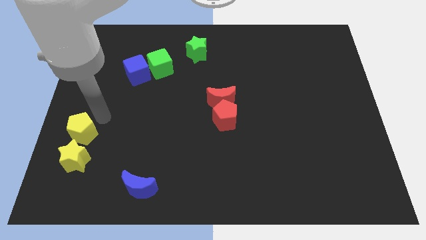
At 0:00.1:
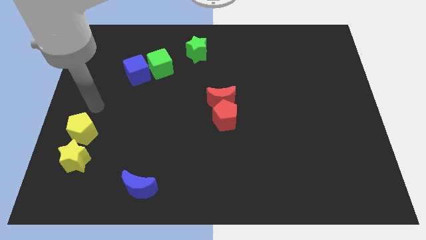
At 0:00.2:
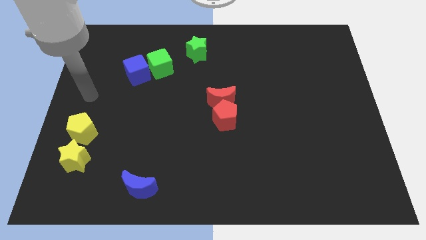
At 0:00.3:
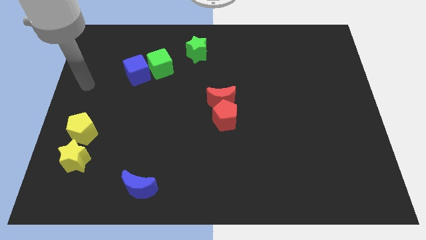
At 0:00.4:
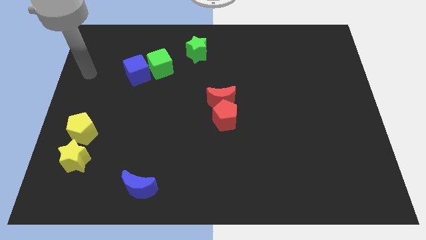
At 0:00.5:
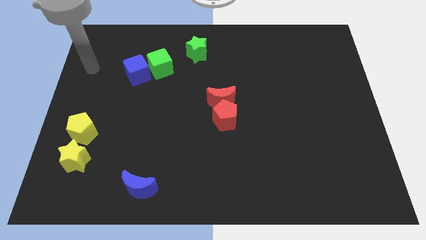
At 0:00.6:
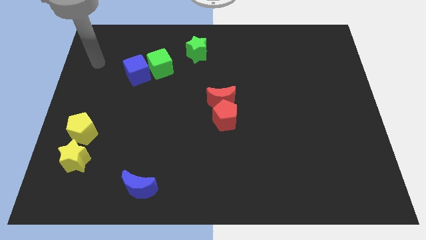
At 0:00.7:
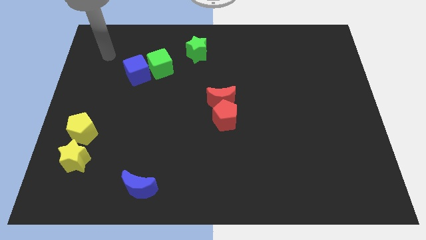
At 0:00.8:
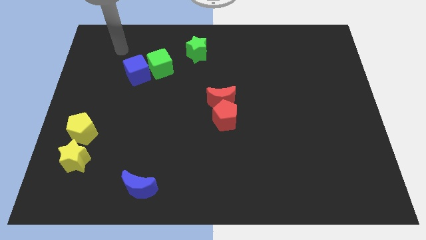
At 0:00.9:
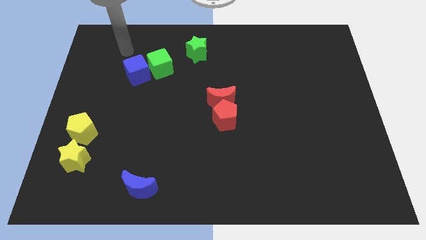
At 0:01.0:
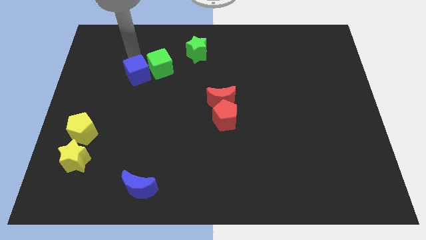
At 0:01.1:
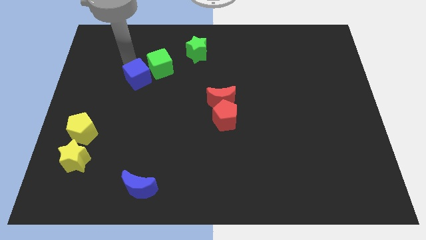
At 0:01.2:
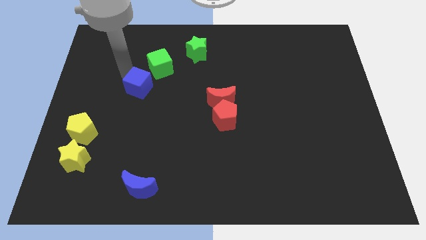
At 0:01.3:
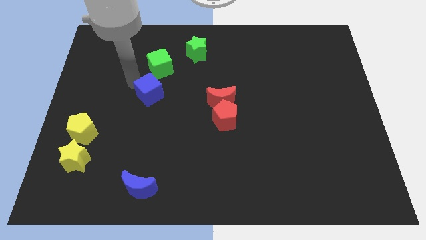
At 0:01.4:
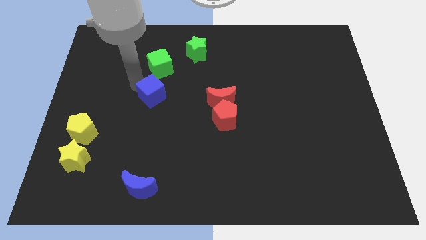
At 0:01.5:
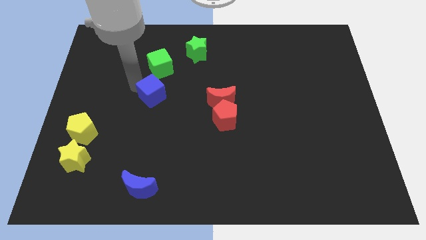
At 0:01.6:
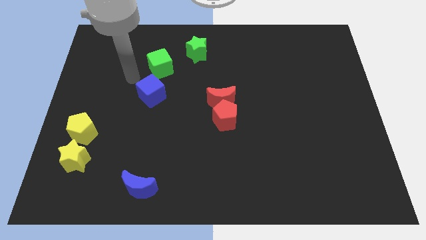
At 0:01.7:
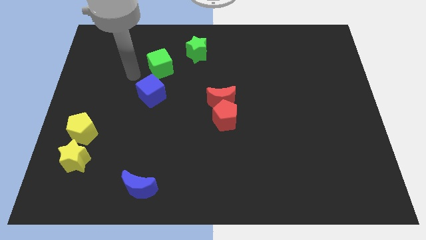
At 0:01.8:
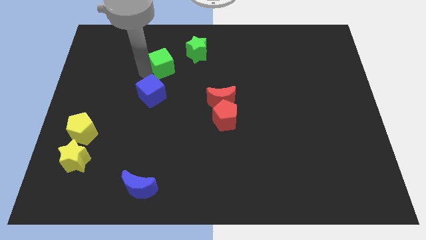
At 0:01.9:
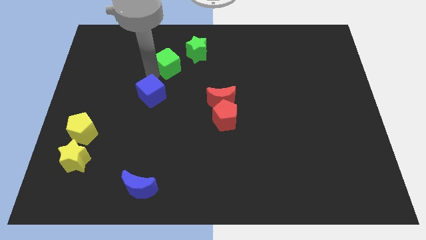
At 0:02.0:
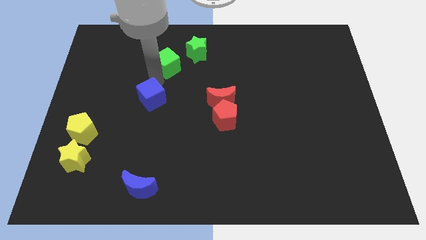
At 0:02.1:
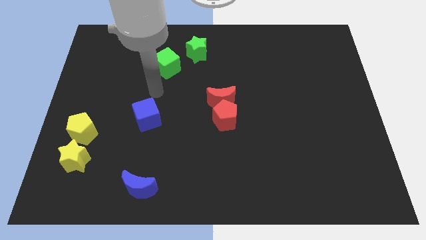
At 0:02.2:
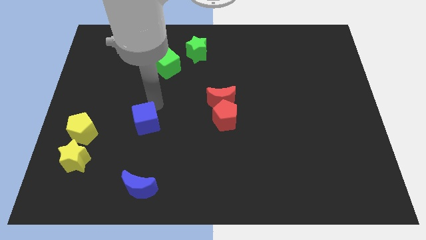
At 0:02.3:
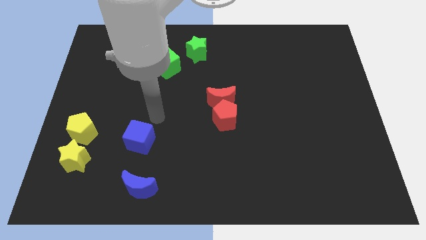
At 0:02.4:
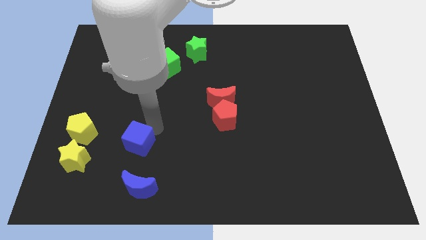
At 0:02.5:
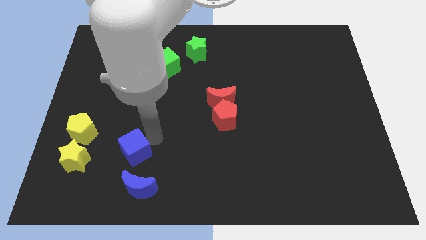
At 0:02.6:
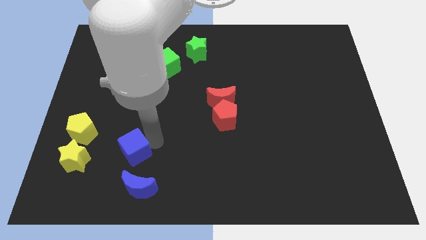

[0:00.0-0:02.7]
push the blue cube towards the blue moon

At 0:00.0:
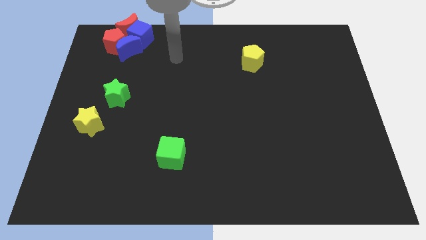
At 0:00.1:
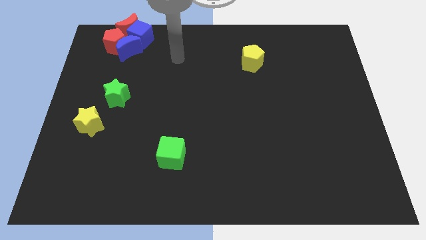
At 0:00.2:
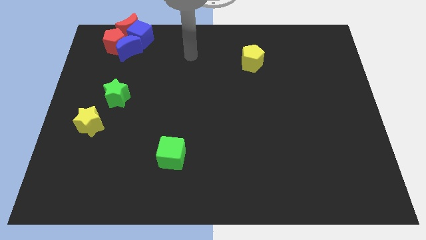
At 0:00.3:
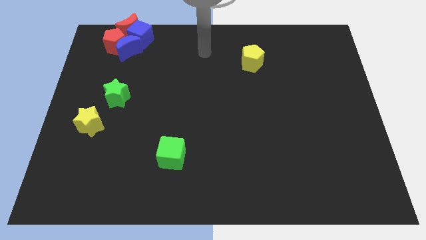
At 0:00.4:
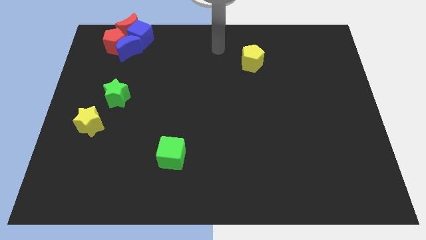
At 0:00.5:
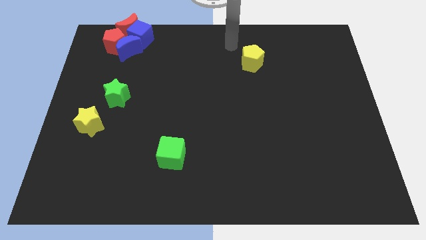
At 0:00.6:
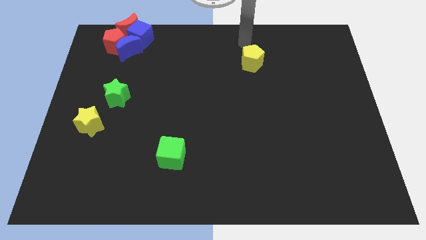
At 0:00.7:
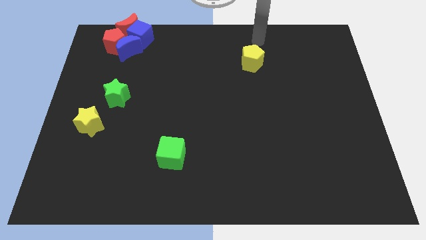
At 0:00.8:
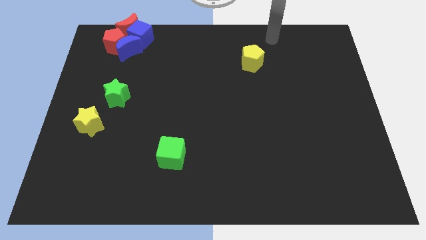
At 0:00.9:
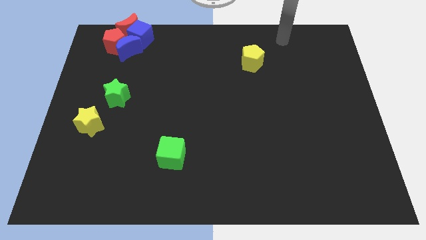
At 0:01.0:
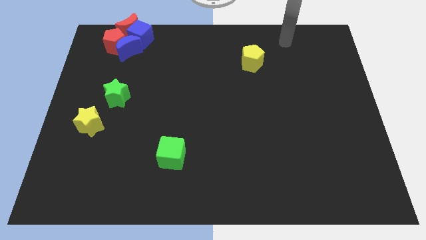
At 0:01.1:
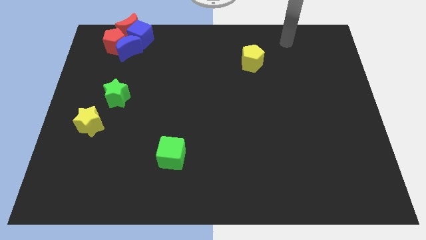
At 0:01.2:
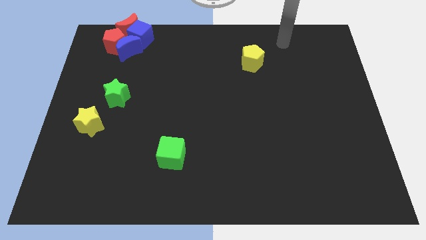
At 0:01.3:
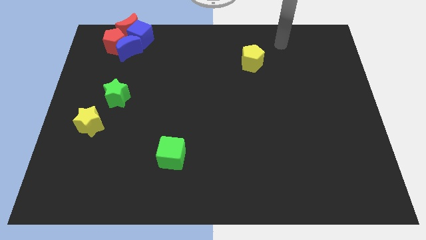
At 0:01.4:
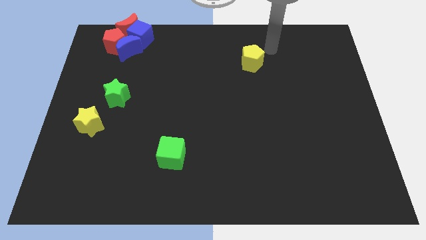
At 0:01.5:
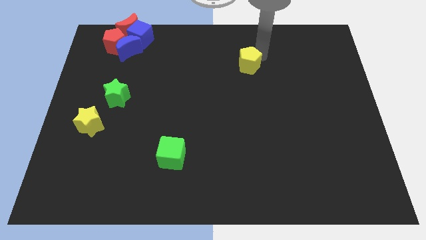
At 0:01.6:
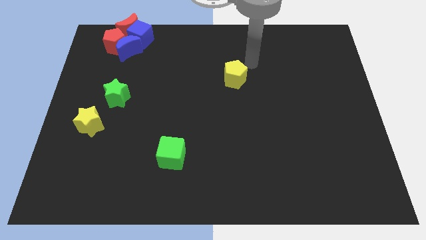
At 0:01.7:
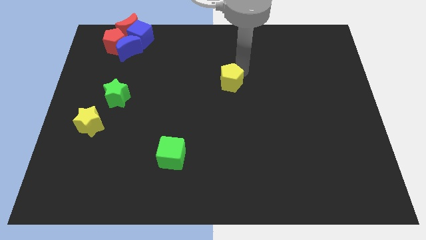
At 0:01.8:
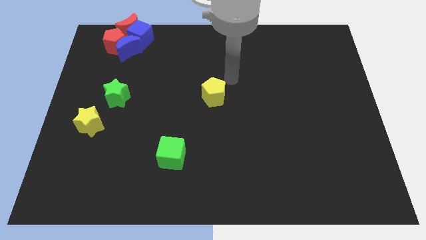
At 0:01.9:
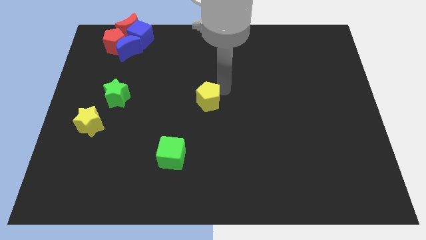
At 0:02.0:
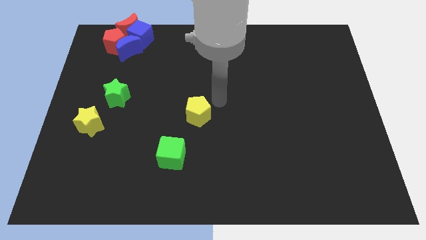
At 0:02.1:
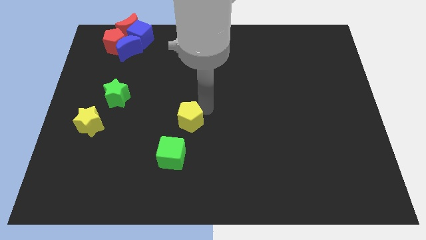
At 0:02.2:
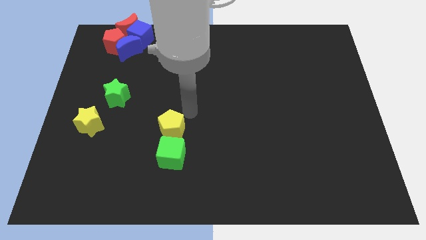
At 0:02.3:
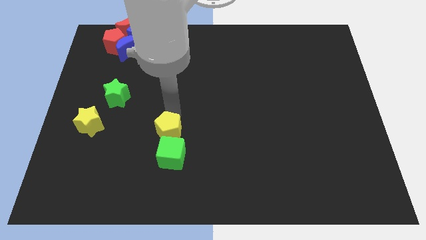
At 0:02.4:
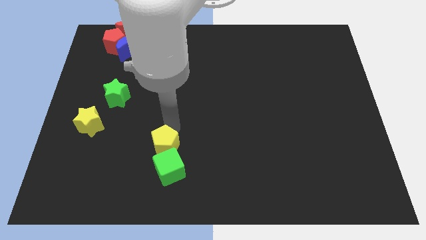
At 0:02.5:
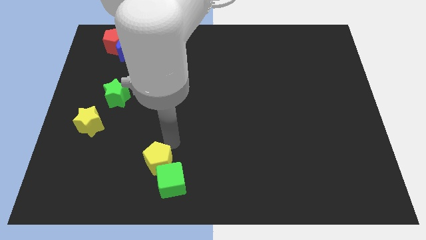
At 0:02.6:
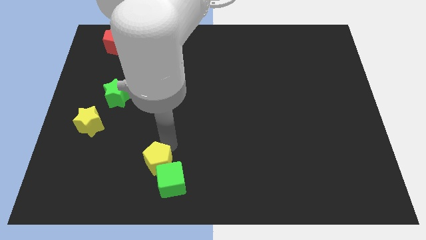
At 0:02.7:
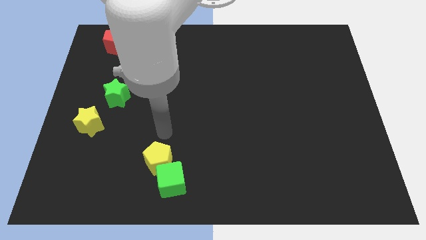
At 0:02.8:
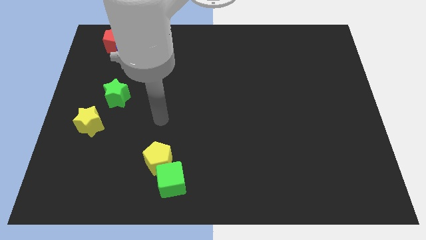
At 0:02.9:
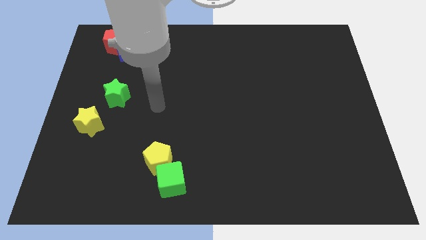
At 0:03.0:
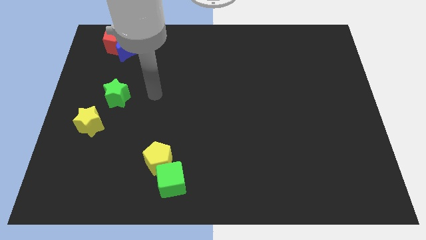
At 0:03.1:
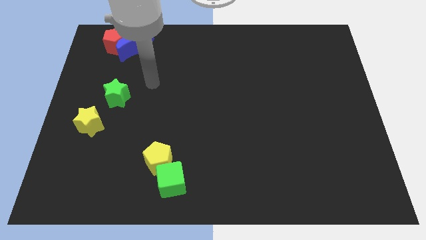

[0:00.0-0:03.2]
push the yellow pentagon into the green cube

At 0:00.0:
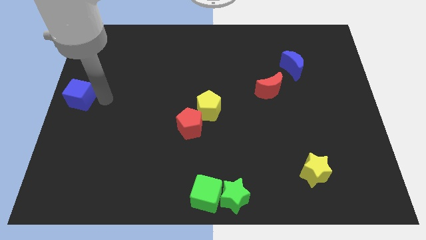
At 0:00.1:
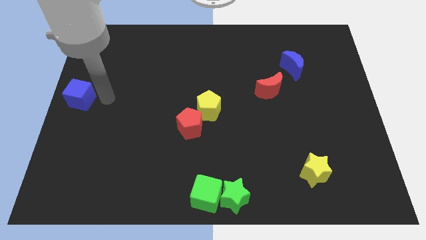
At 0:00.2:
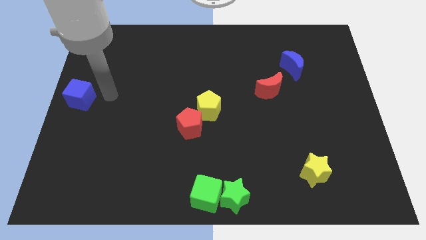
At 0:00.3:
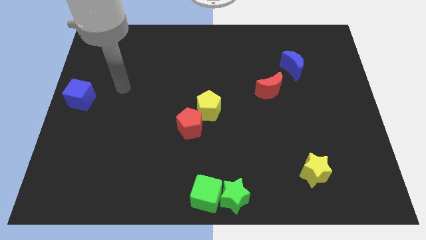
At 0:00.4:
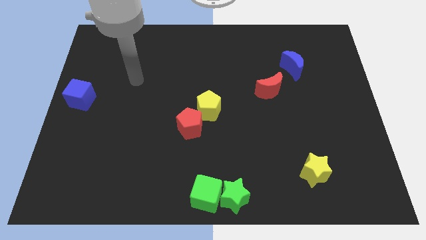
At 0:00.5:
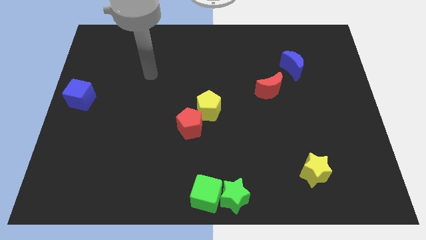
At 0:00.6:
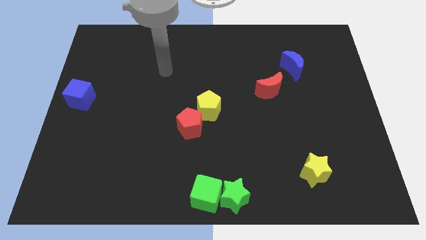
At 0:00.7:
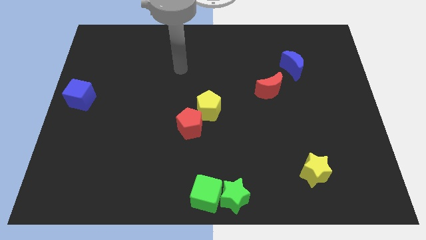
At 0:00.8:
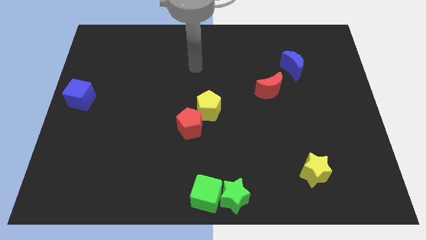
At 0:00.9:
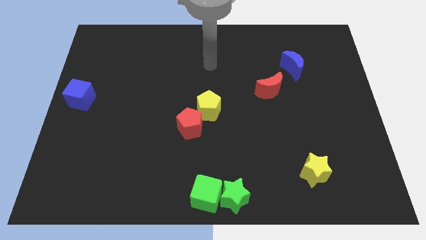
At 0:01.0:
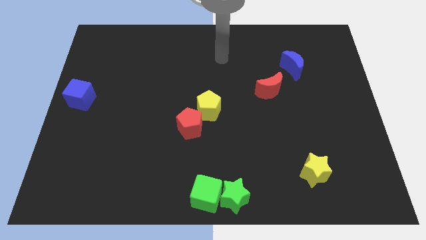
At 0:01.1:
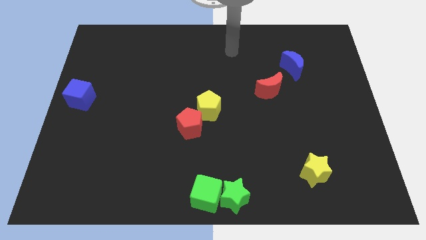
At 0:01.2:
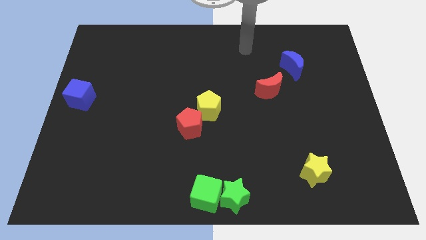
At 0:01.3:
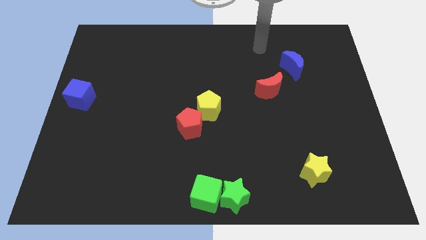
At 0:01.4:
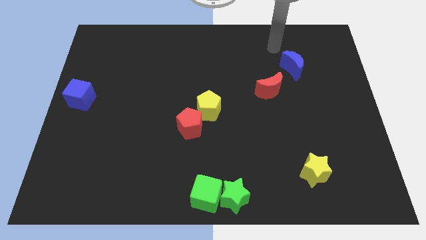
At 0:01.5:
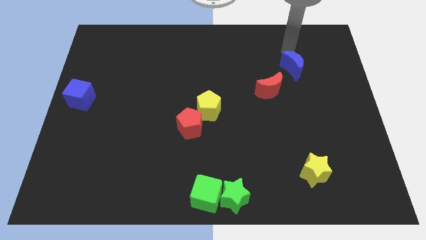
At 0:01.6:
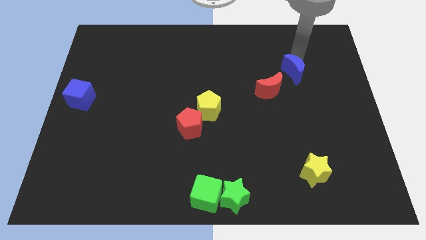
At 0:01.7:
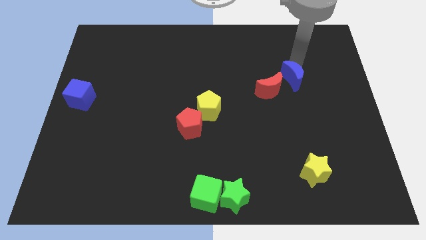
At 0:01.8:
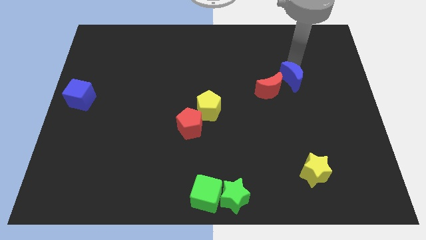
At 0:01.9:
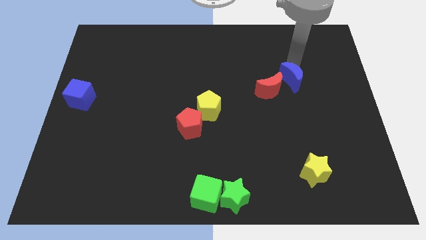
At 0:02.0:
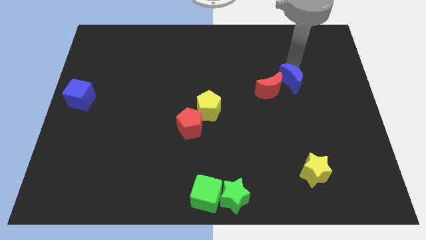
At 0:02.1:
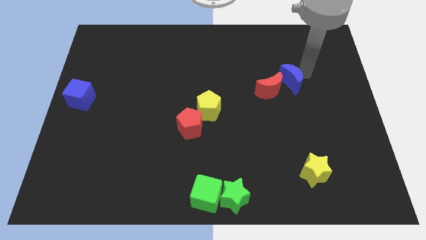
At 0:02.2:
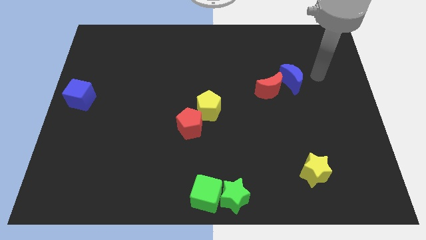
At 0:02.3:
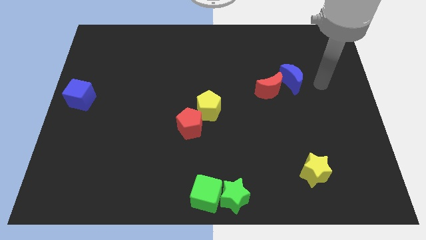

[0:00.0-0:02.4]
slightly move the blue crescent close to red crescent

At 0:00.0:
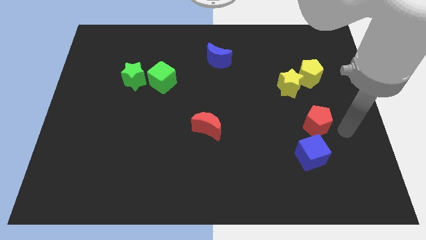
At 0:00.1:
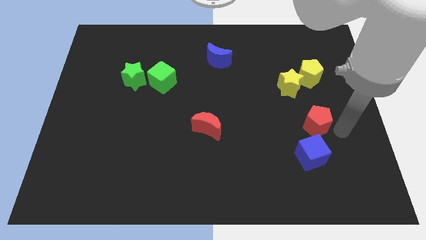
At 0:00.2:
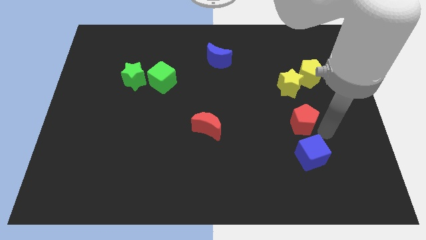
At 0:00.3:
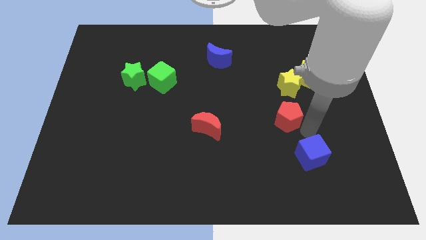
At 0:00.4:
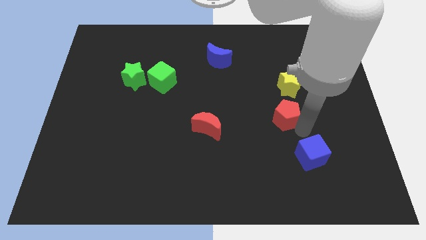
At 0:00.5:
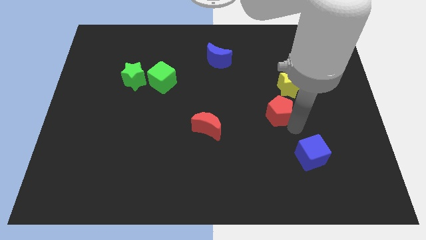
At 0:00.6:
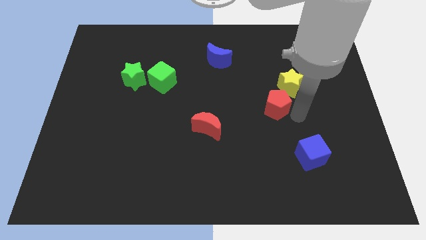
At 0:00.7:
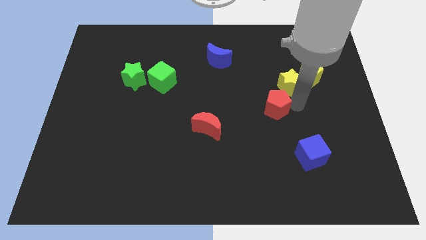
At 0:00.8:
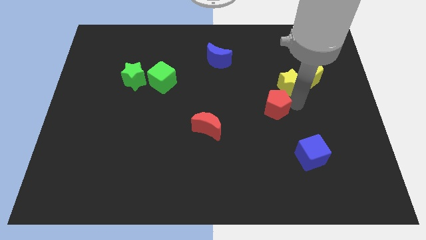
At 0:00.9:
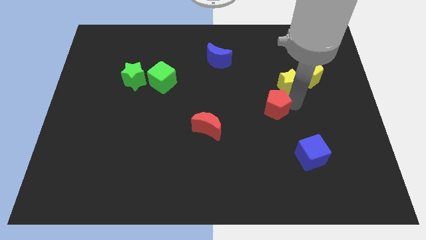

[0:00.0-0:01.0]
push the red pentagon below the yellow star
